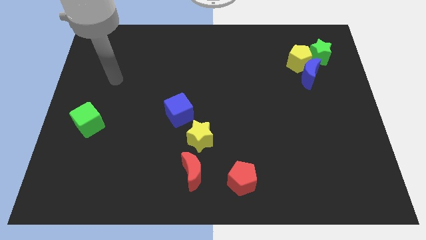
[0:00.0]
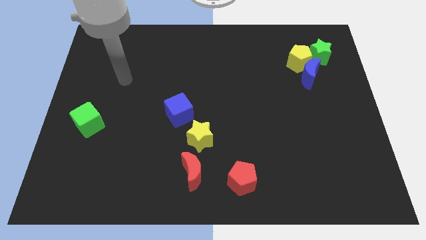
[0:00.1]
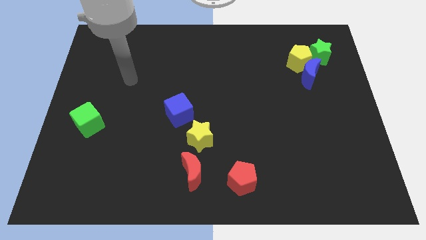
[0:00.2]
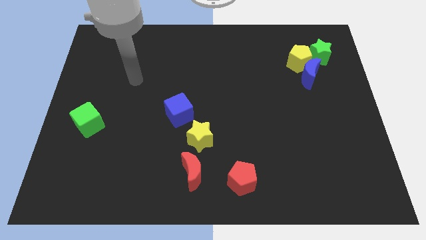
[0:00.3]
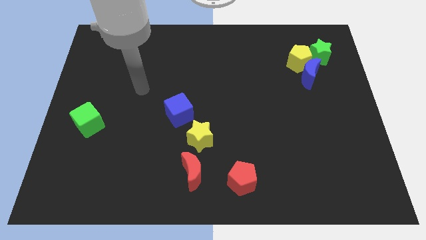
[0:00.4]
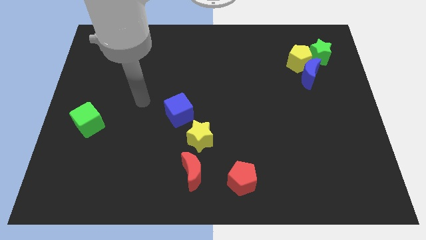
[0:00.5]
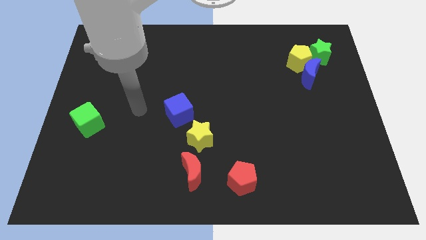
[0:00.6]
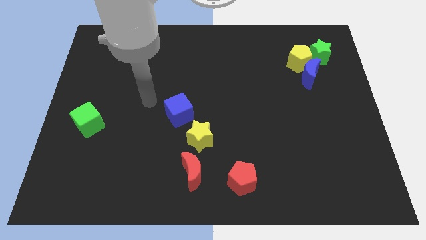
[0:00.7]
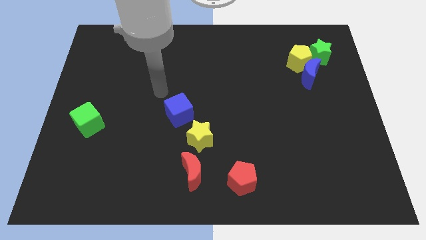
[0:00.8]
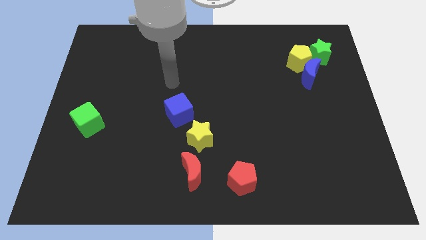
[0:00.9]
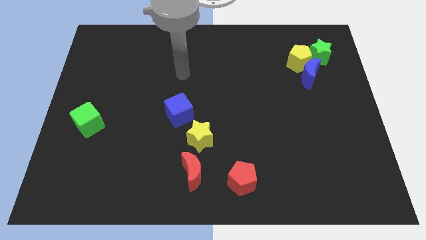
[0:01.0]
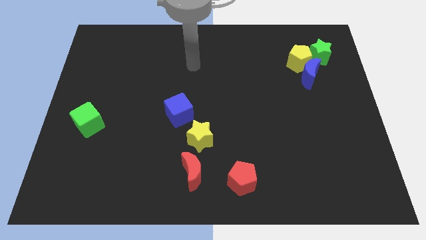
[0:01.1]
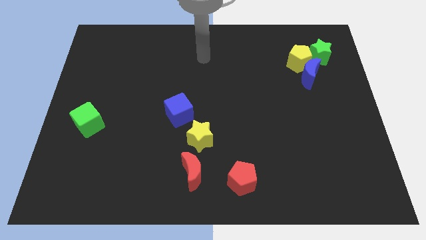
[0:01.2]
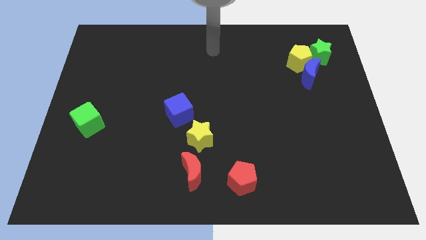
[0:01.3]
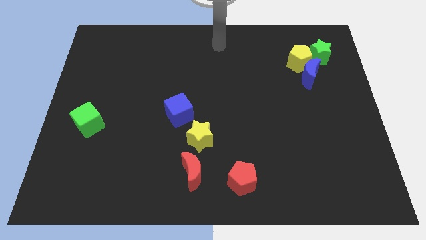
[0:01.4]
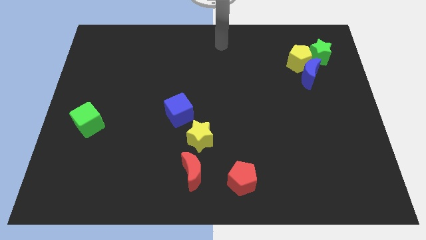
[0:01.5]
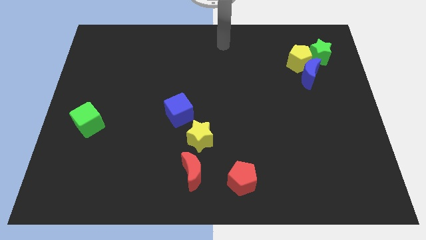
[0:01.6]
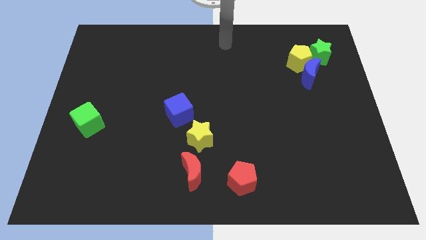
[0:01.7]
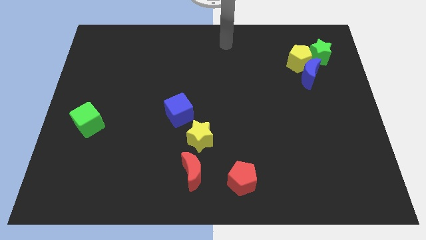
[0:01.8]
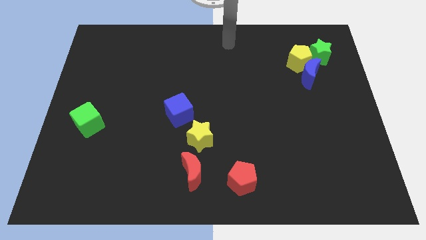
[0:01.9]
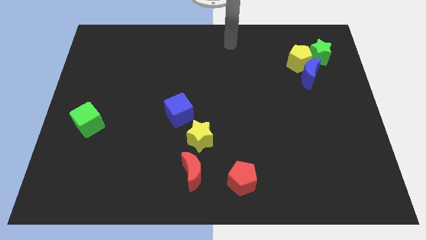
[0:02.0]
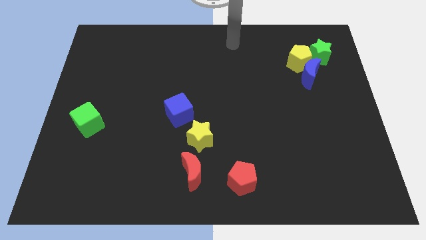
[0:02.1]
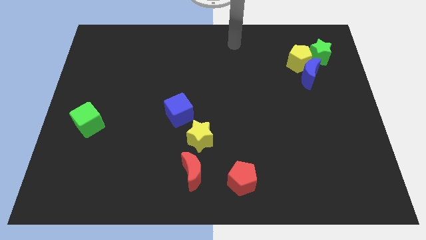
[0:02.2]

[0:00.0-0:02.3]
move your arm without touching any block

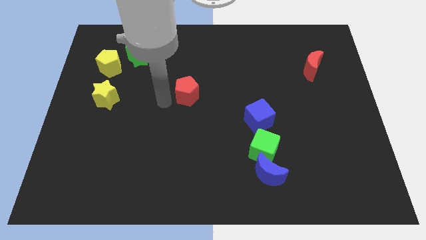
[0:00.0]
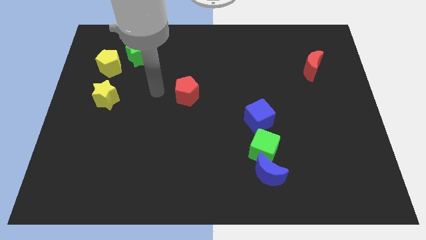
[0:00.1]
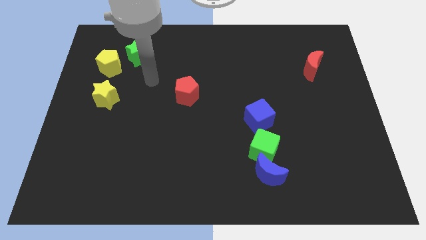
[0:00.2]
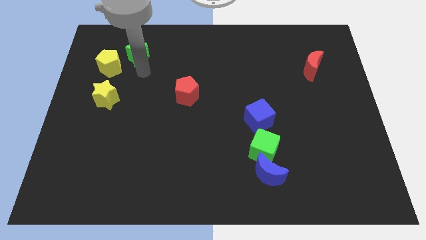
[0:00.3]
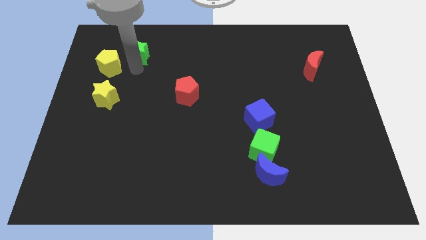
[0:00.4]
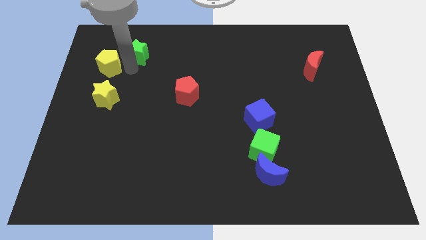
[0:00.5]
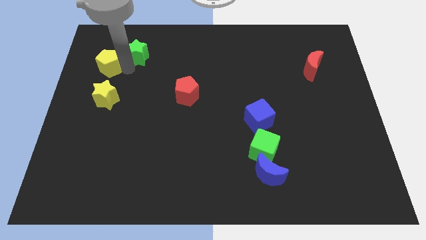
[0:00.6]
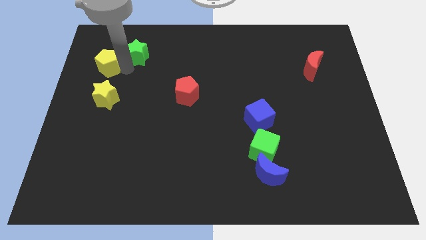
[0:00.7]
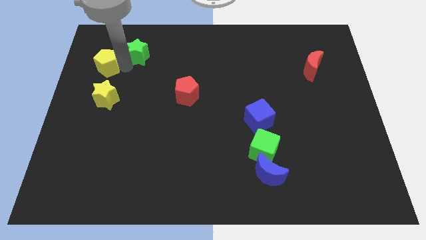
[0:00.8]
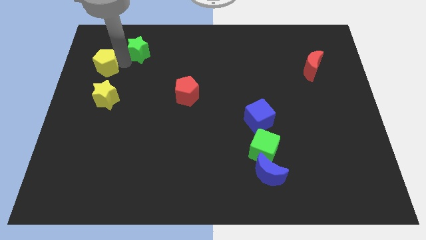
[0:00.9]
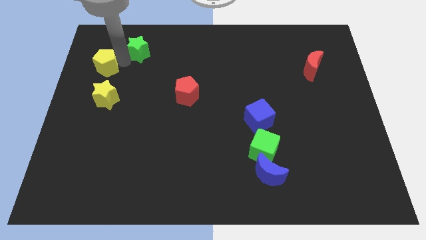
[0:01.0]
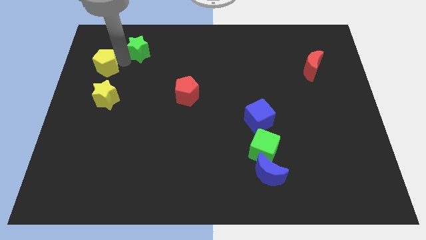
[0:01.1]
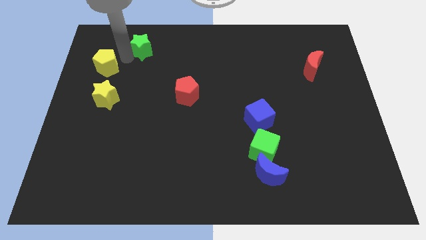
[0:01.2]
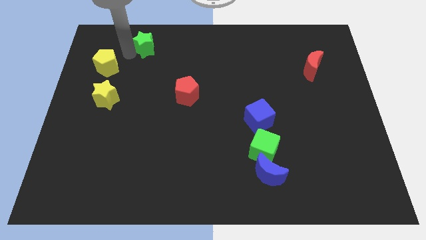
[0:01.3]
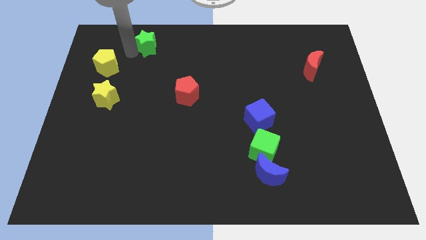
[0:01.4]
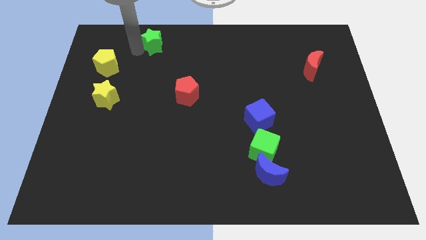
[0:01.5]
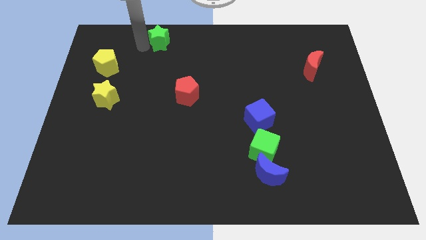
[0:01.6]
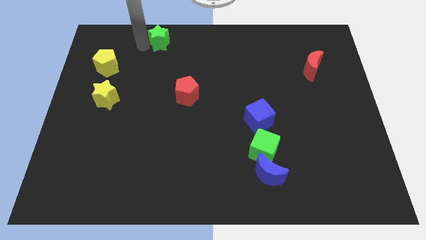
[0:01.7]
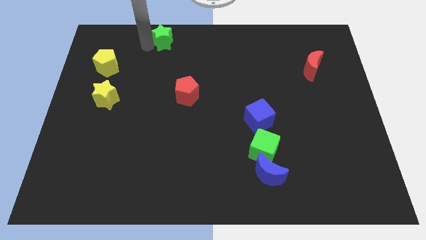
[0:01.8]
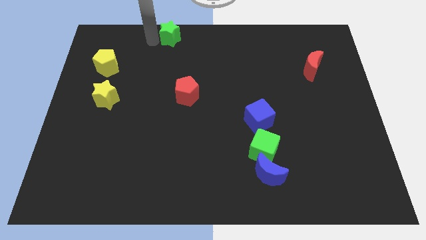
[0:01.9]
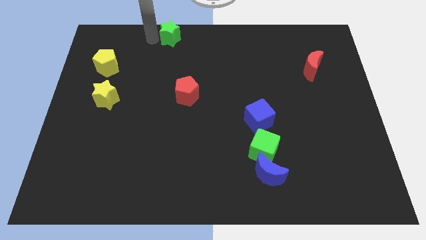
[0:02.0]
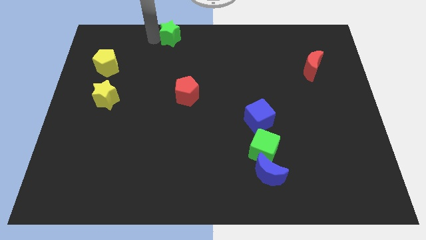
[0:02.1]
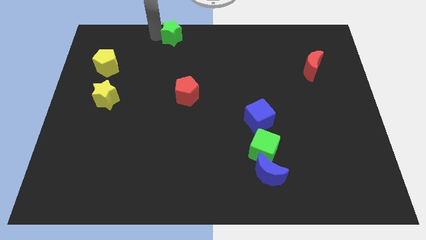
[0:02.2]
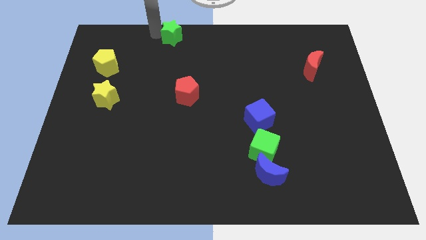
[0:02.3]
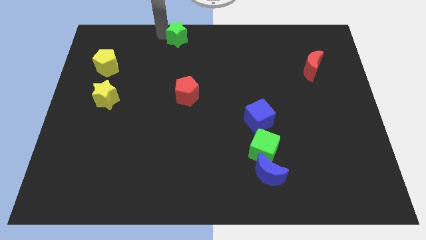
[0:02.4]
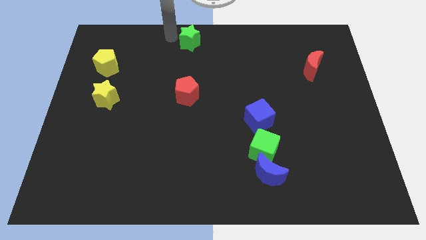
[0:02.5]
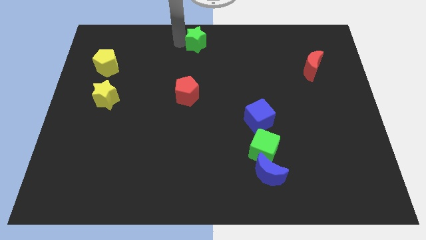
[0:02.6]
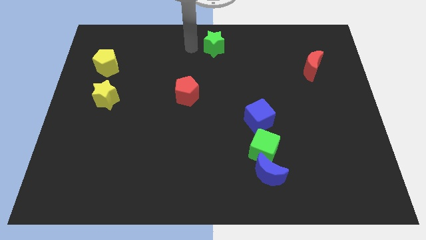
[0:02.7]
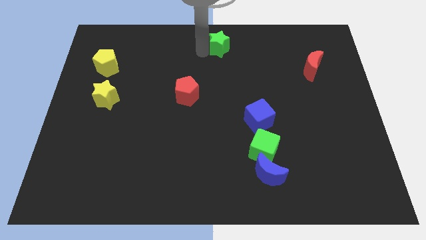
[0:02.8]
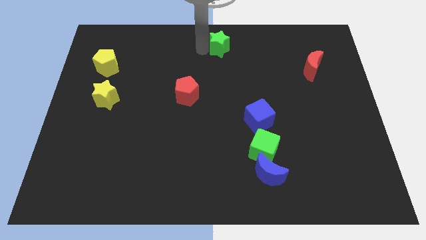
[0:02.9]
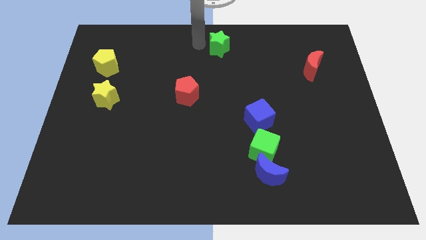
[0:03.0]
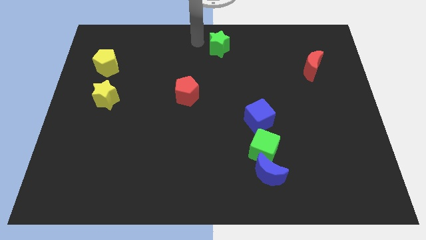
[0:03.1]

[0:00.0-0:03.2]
slide the green star diagonally top right to the red pentagon

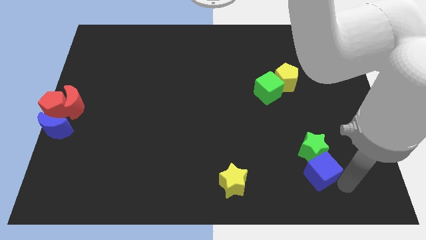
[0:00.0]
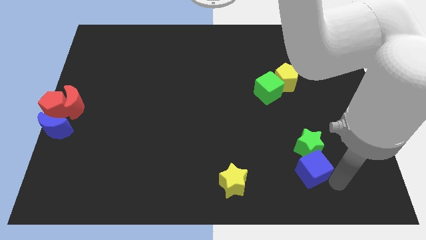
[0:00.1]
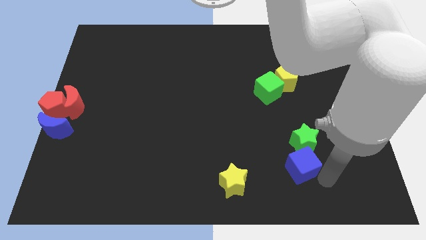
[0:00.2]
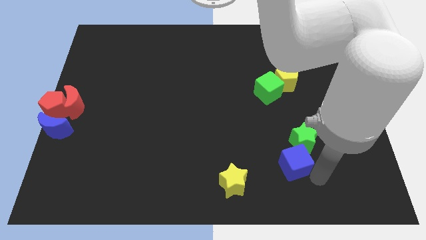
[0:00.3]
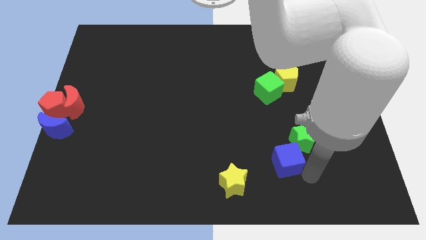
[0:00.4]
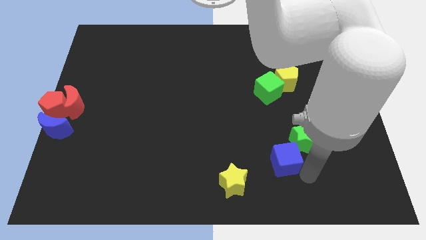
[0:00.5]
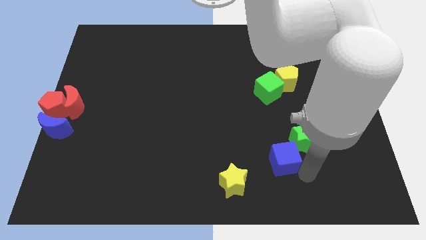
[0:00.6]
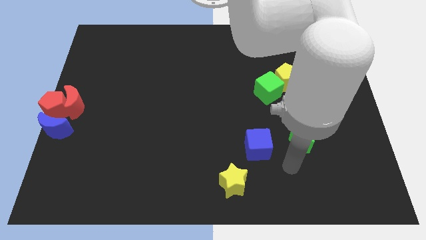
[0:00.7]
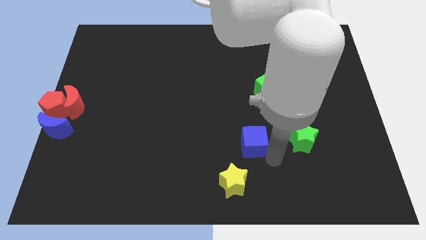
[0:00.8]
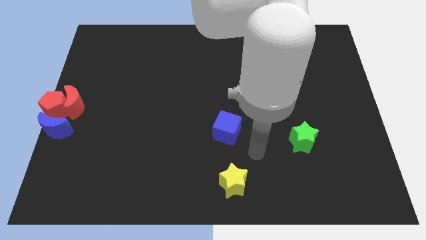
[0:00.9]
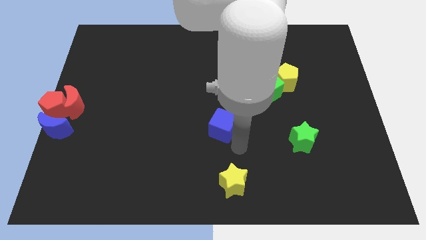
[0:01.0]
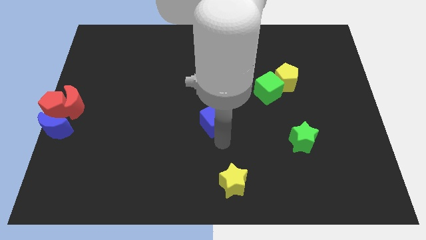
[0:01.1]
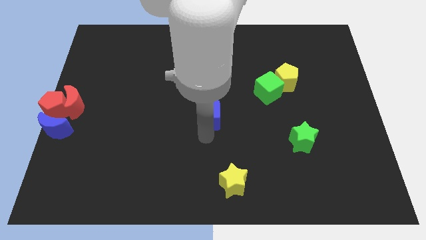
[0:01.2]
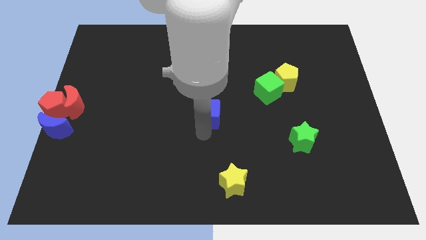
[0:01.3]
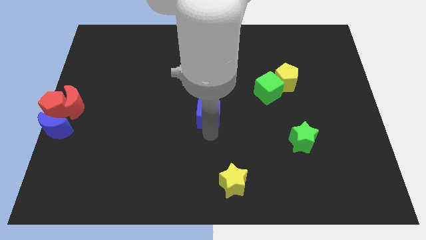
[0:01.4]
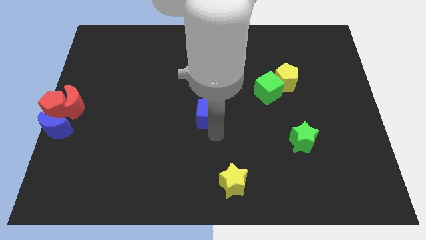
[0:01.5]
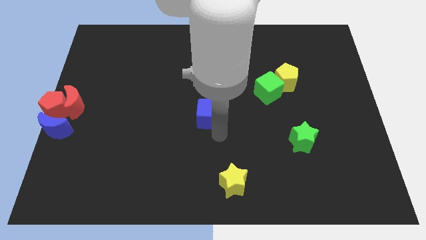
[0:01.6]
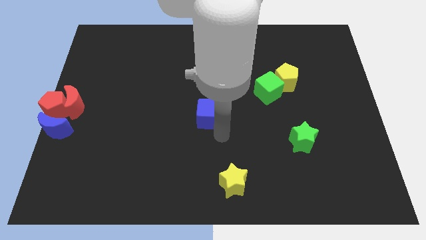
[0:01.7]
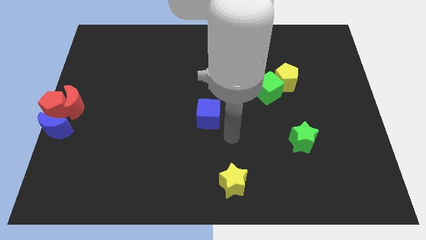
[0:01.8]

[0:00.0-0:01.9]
push the blue cube to the center of the board

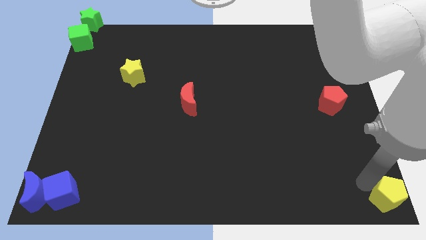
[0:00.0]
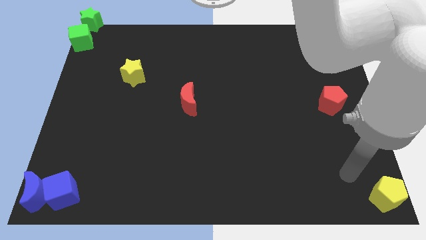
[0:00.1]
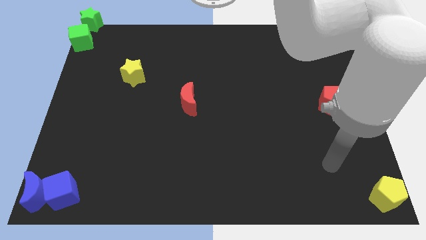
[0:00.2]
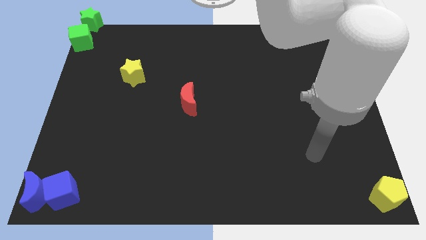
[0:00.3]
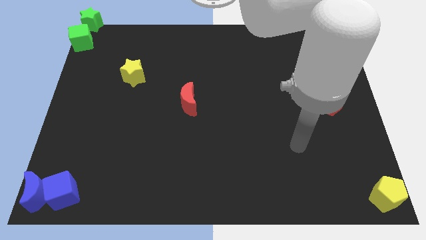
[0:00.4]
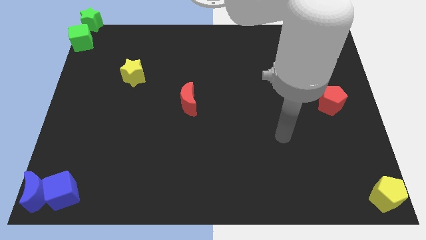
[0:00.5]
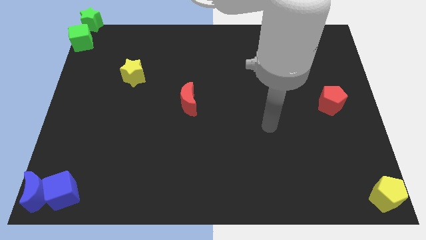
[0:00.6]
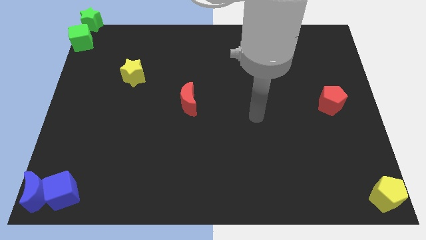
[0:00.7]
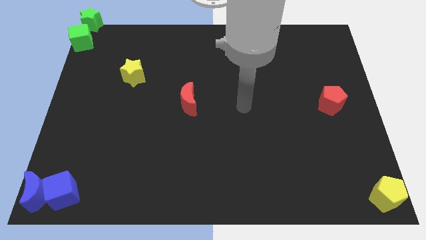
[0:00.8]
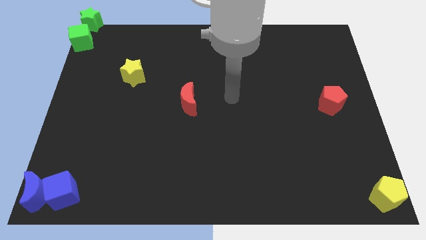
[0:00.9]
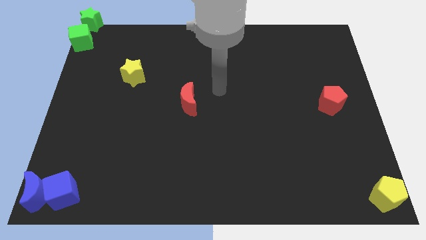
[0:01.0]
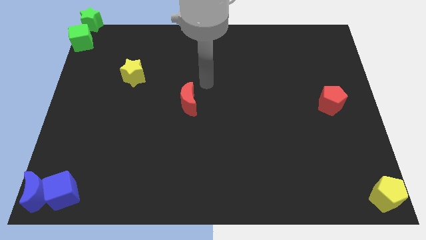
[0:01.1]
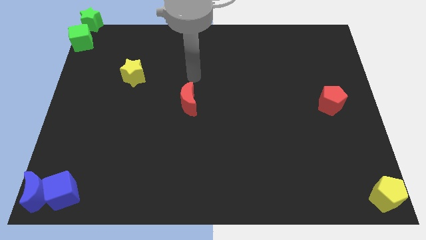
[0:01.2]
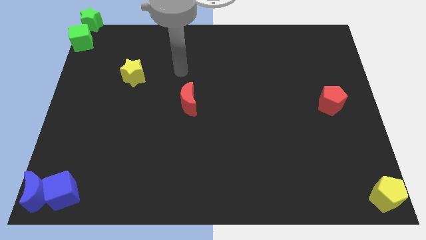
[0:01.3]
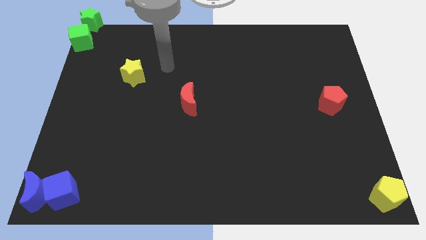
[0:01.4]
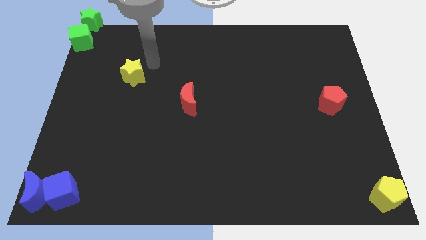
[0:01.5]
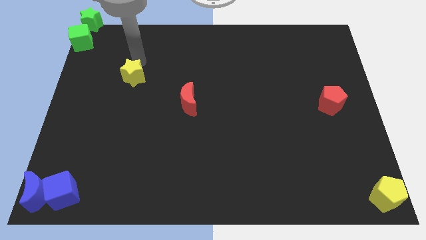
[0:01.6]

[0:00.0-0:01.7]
move your arm towards the yellow star
